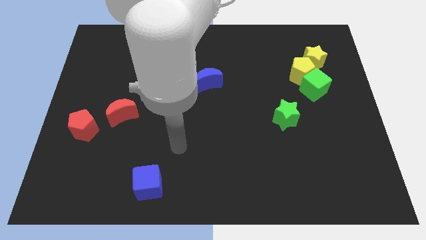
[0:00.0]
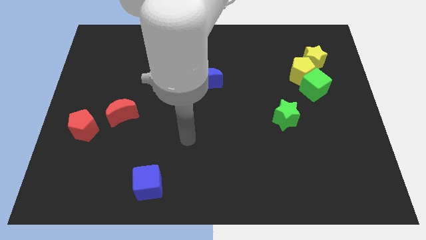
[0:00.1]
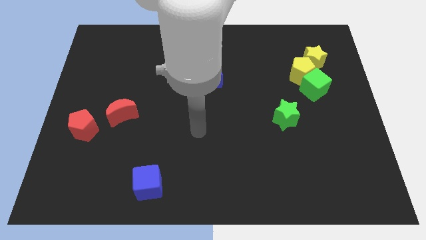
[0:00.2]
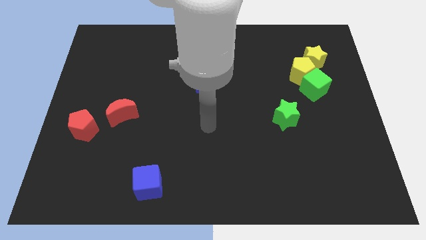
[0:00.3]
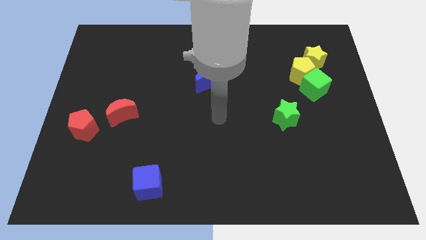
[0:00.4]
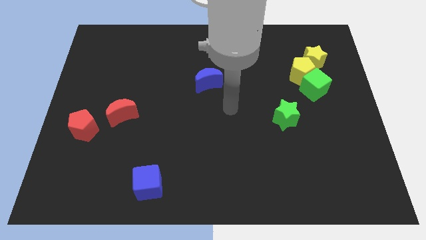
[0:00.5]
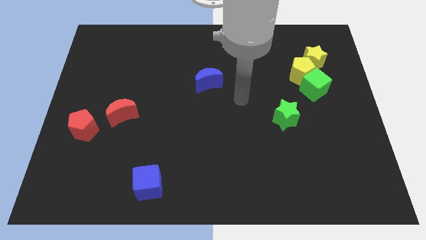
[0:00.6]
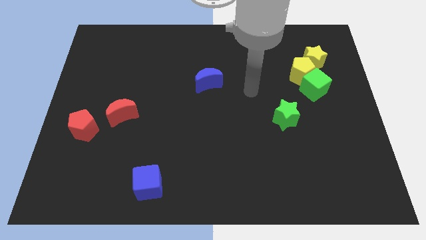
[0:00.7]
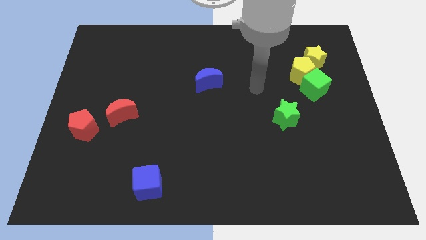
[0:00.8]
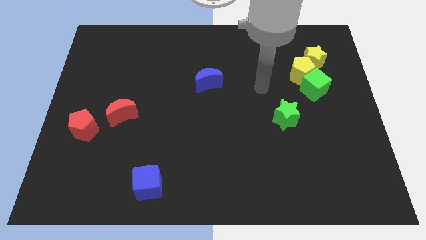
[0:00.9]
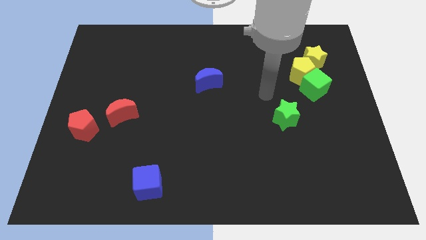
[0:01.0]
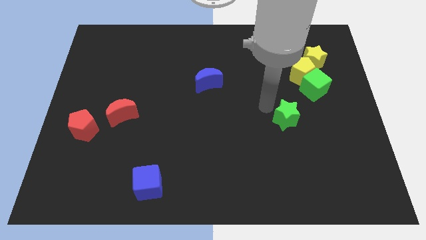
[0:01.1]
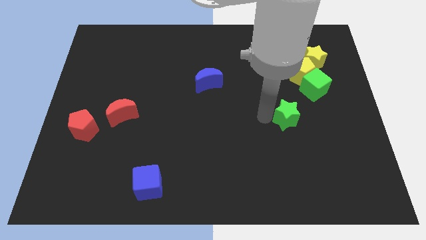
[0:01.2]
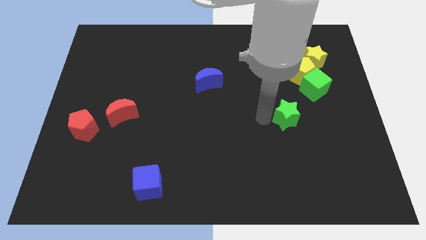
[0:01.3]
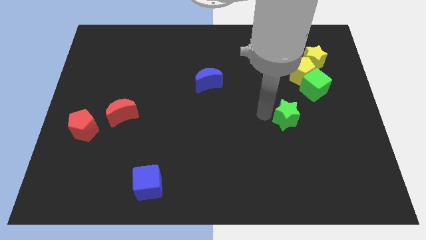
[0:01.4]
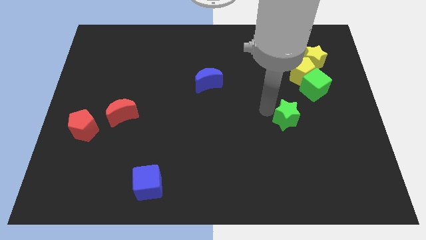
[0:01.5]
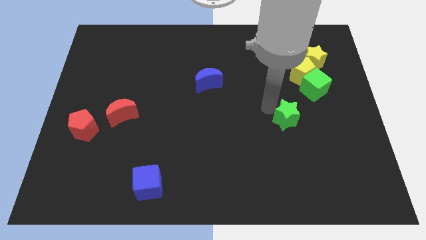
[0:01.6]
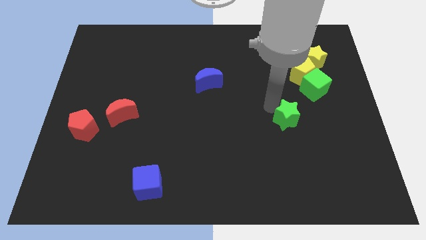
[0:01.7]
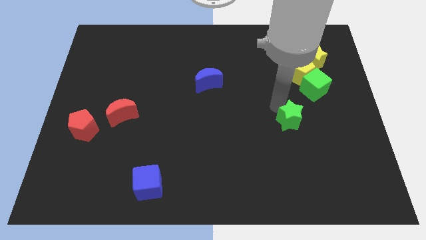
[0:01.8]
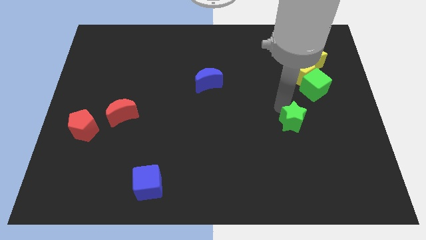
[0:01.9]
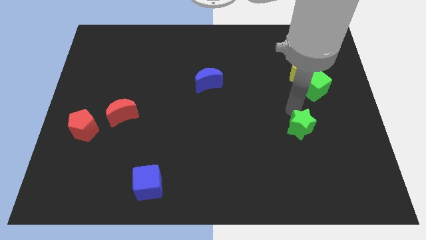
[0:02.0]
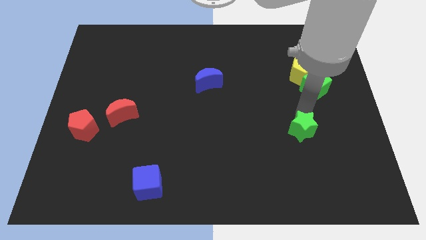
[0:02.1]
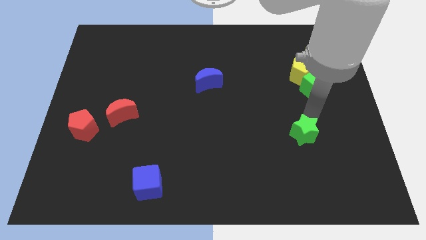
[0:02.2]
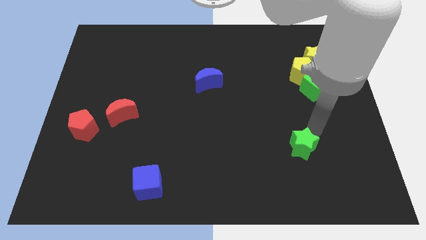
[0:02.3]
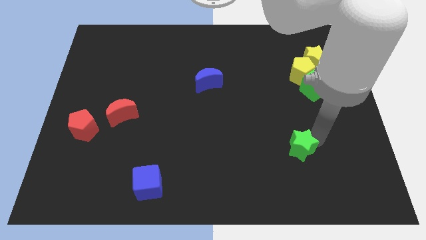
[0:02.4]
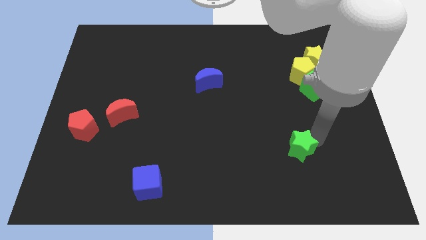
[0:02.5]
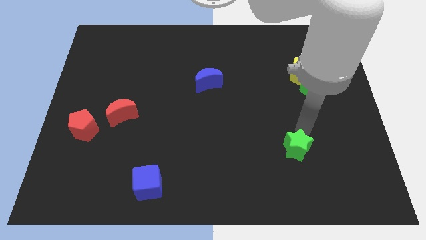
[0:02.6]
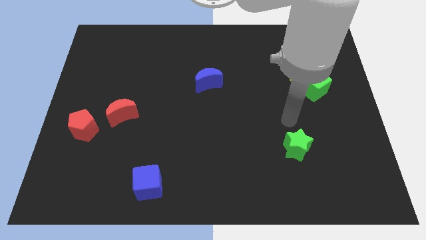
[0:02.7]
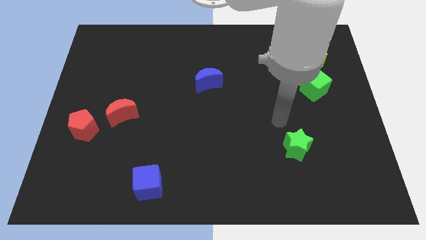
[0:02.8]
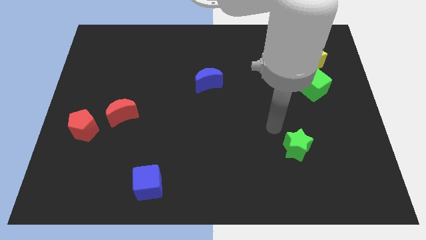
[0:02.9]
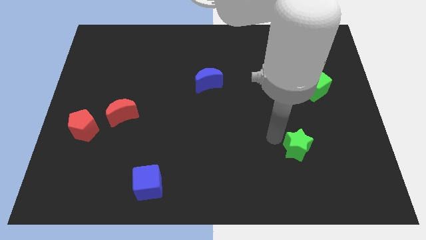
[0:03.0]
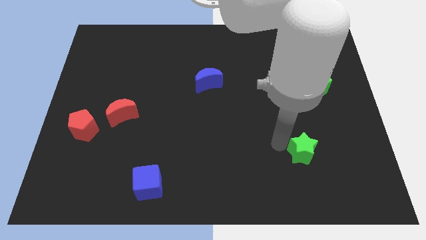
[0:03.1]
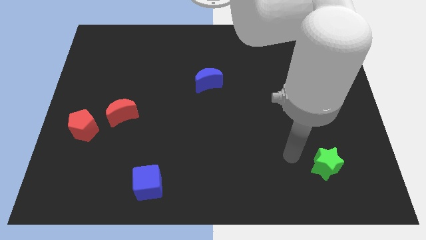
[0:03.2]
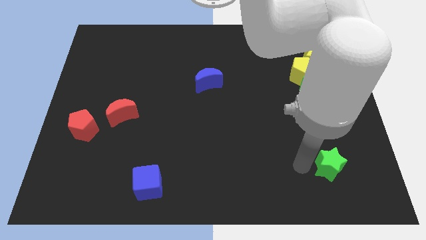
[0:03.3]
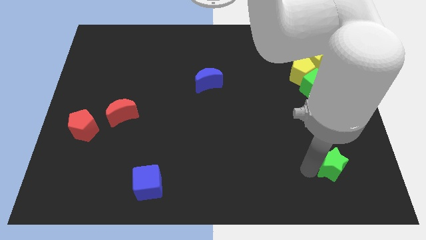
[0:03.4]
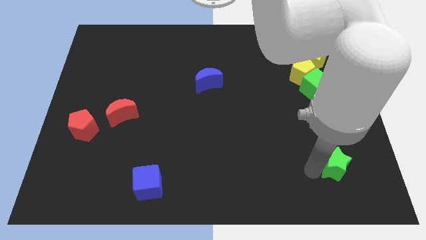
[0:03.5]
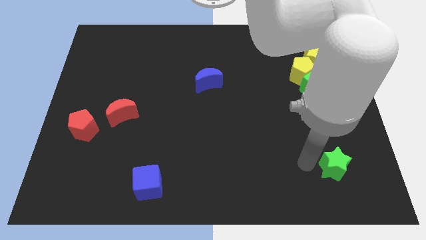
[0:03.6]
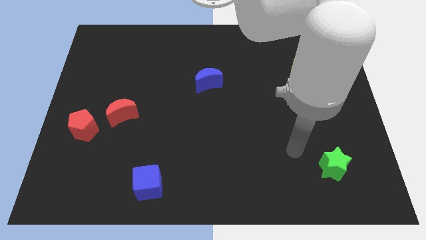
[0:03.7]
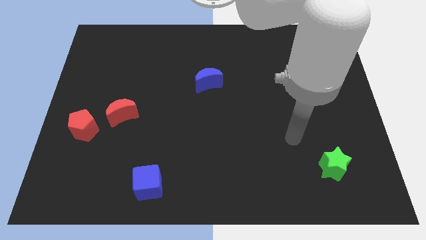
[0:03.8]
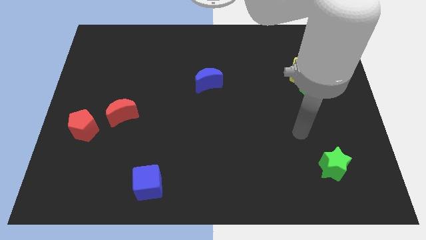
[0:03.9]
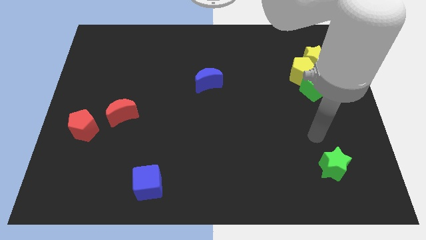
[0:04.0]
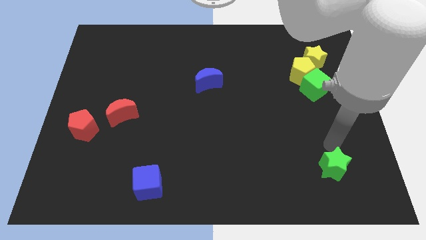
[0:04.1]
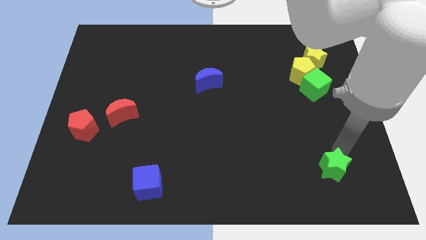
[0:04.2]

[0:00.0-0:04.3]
push the green star towards the bottom side of the board

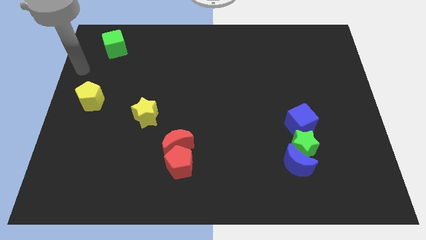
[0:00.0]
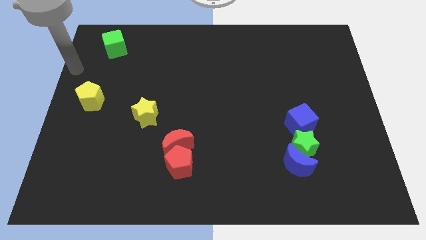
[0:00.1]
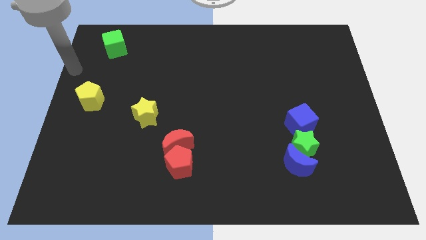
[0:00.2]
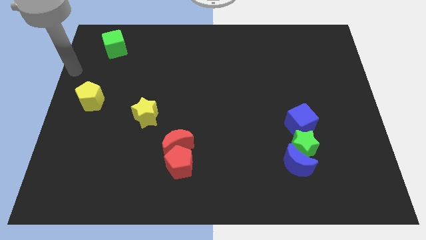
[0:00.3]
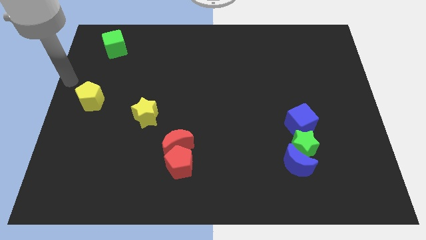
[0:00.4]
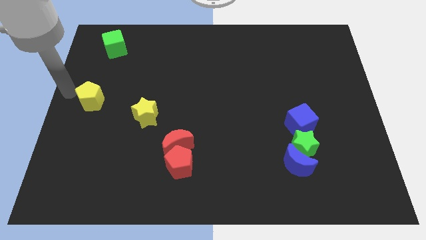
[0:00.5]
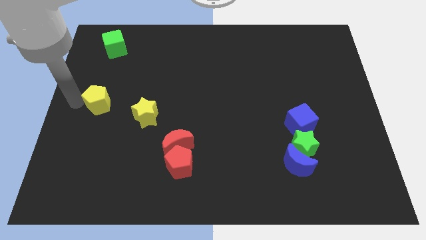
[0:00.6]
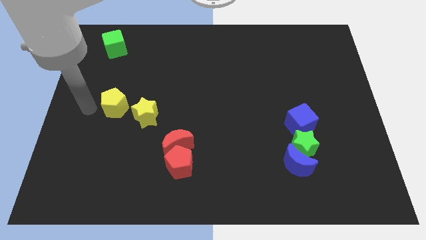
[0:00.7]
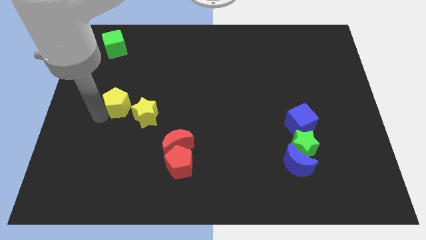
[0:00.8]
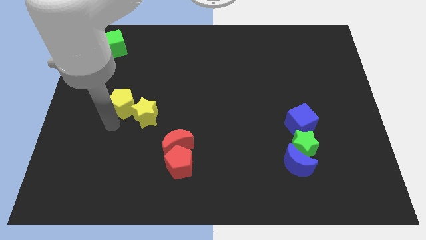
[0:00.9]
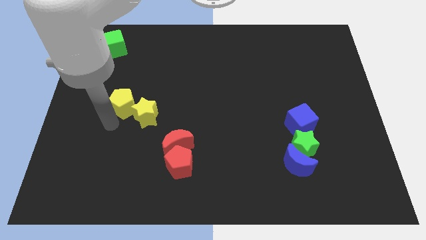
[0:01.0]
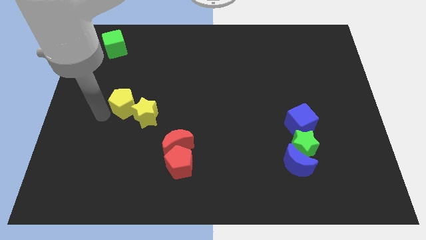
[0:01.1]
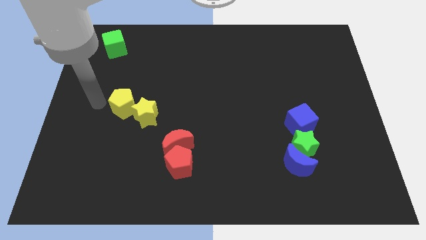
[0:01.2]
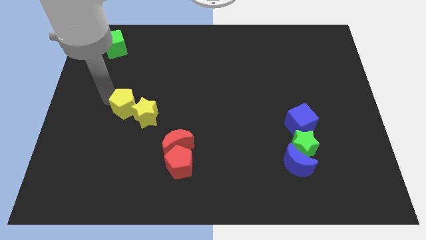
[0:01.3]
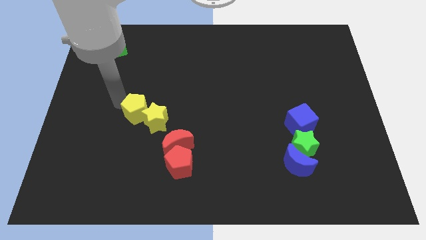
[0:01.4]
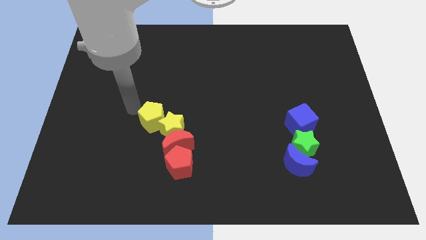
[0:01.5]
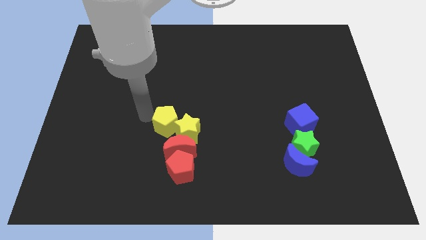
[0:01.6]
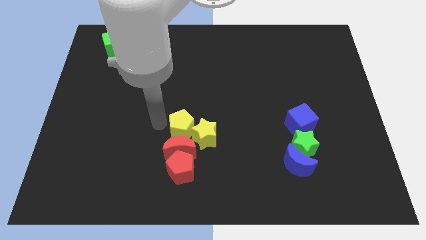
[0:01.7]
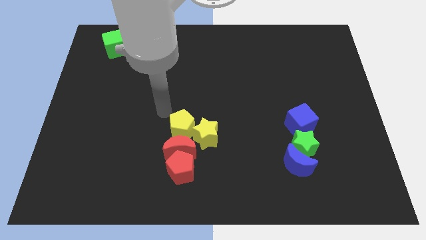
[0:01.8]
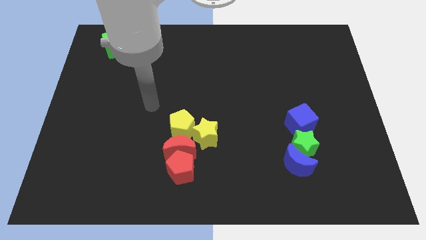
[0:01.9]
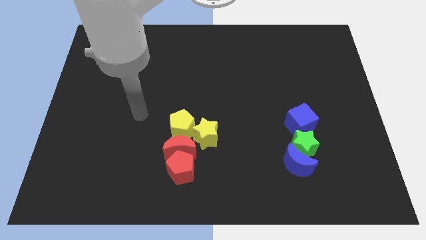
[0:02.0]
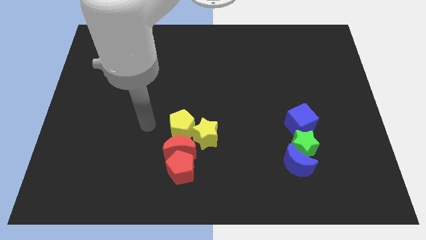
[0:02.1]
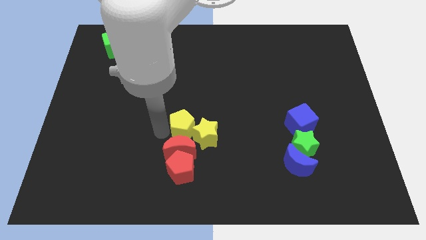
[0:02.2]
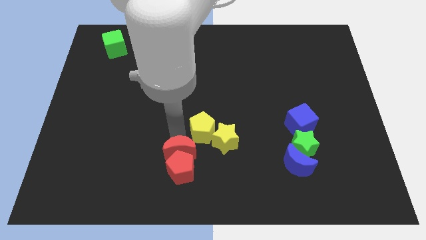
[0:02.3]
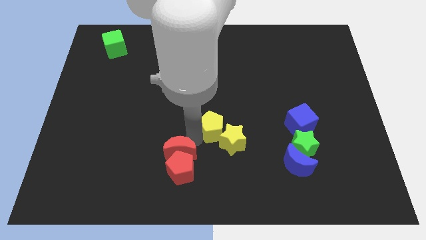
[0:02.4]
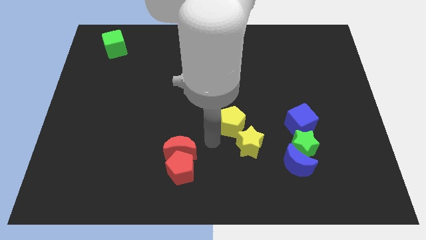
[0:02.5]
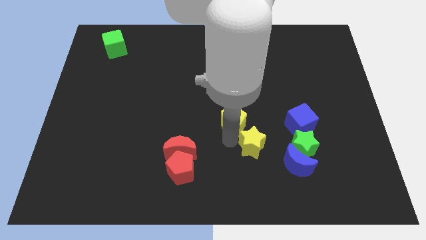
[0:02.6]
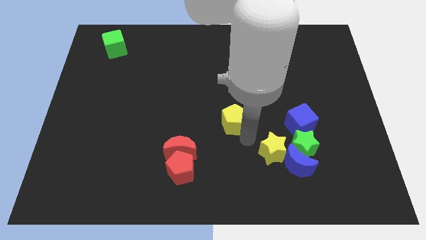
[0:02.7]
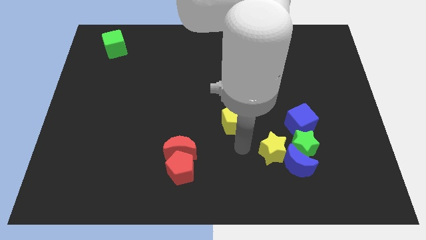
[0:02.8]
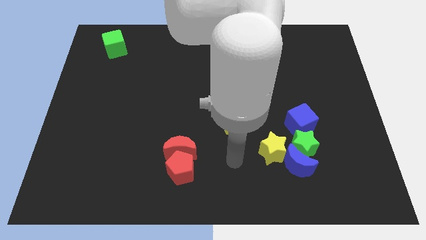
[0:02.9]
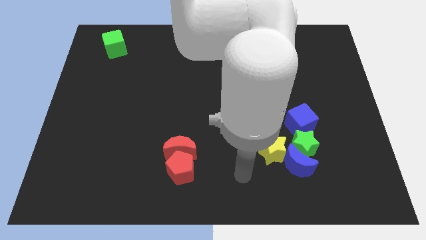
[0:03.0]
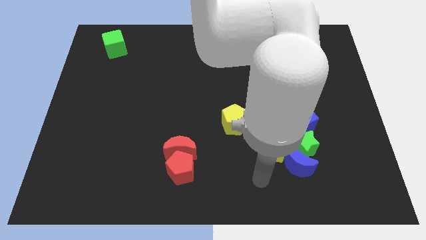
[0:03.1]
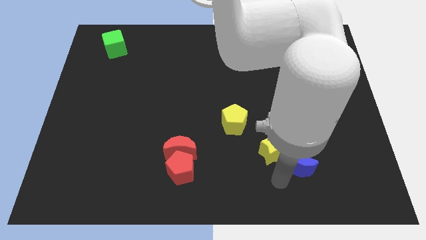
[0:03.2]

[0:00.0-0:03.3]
push the yellow blocks towards the vertical line of blocks

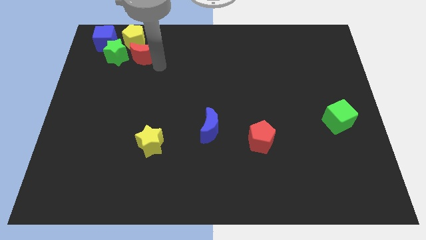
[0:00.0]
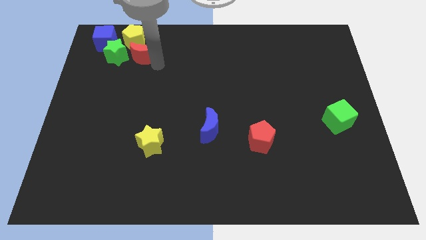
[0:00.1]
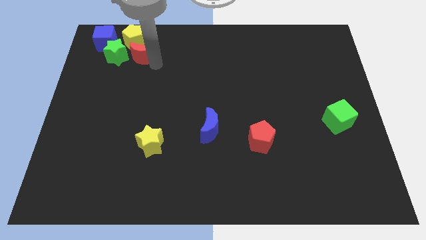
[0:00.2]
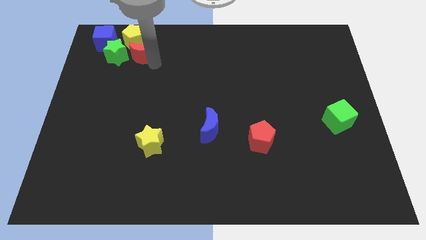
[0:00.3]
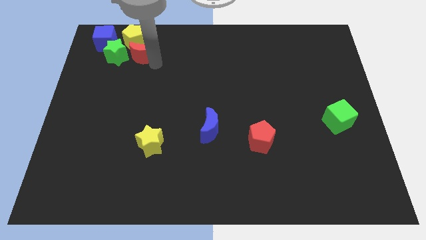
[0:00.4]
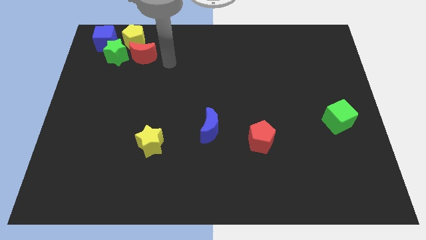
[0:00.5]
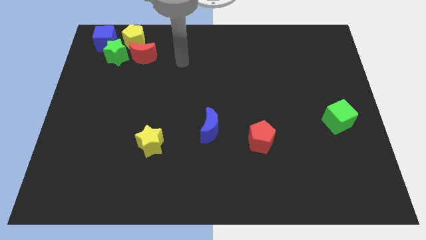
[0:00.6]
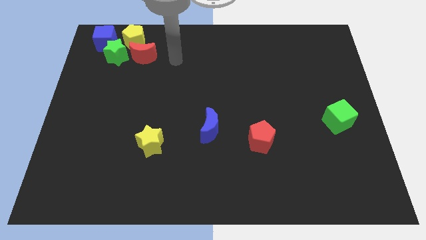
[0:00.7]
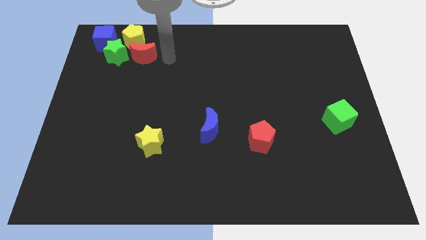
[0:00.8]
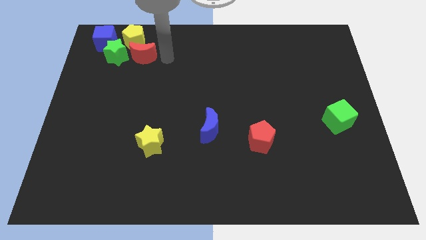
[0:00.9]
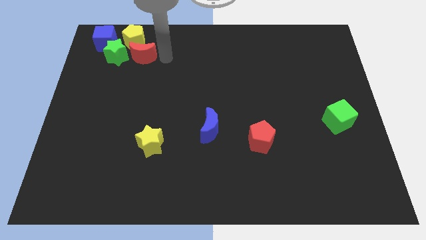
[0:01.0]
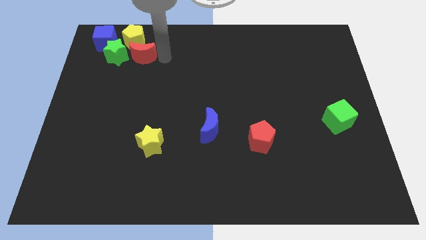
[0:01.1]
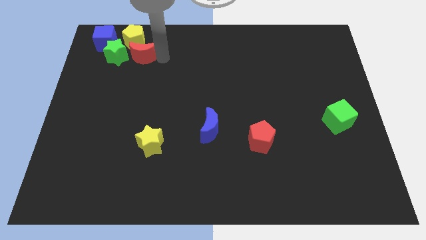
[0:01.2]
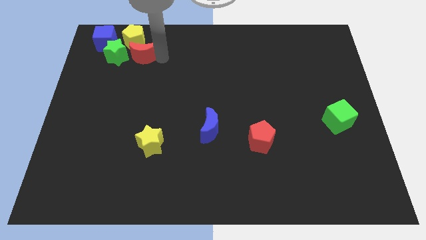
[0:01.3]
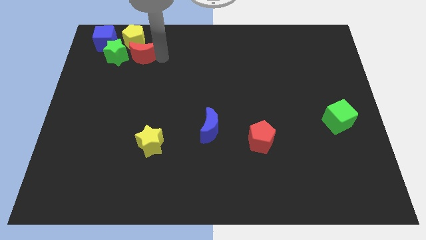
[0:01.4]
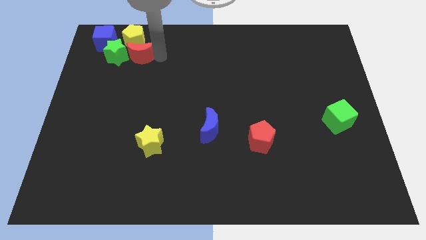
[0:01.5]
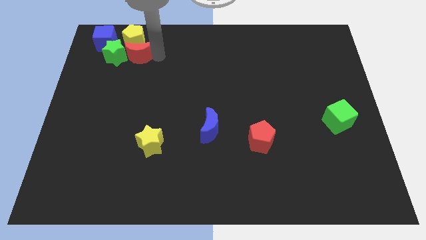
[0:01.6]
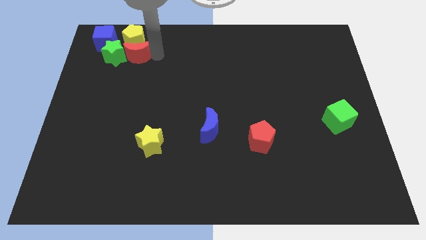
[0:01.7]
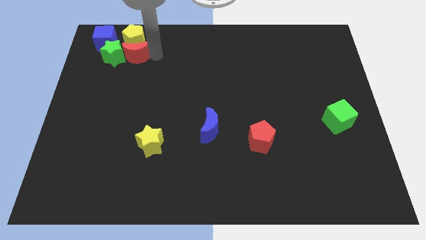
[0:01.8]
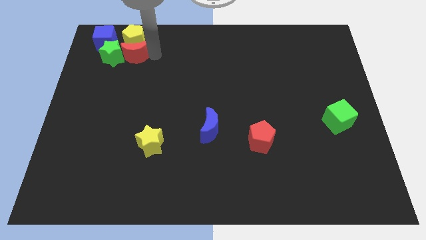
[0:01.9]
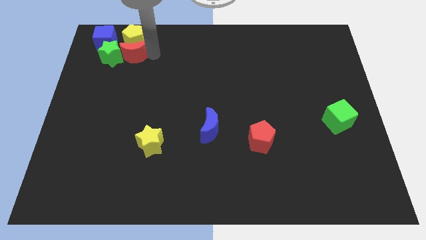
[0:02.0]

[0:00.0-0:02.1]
push the red crescent into the green star
